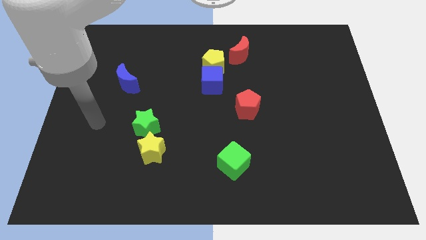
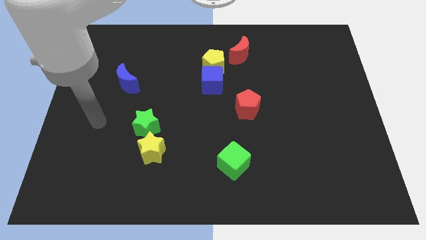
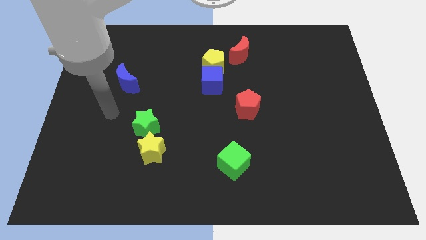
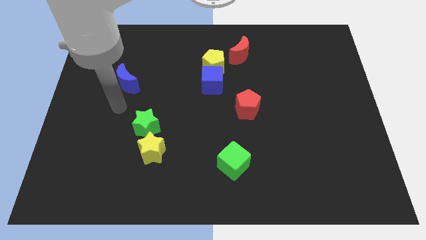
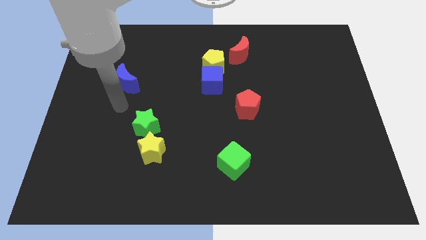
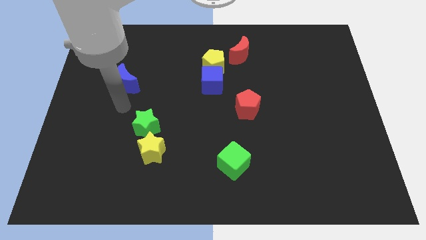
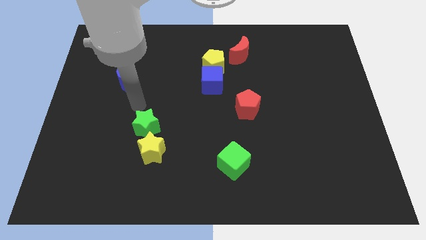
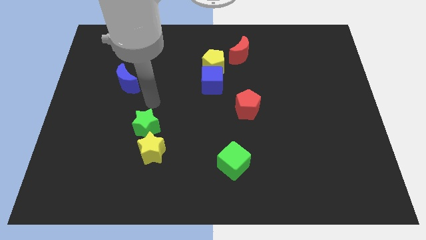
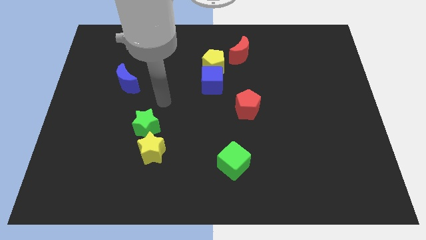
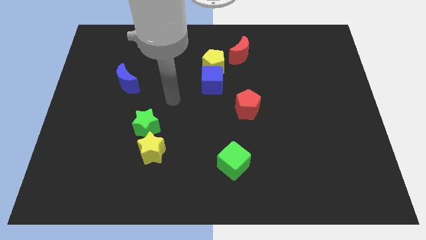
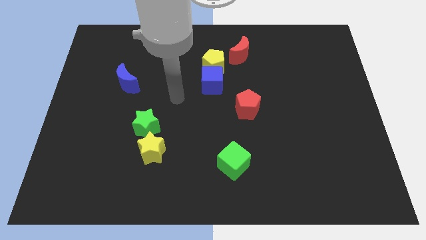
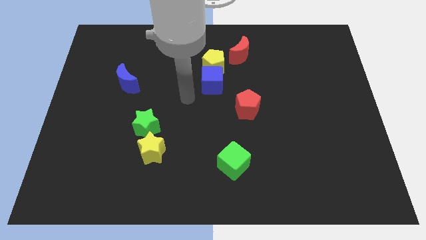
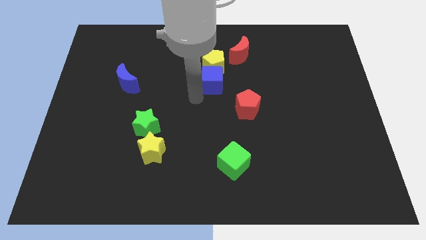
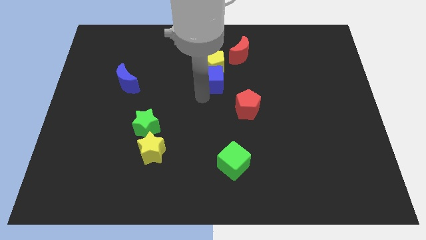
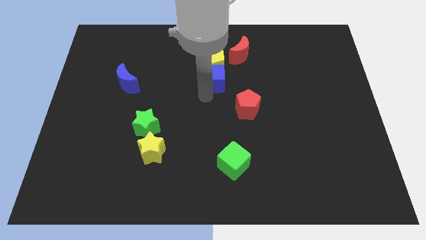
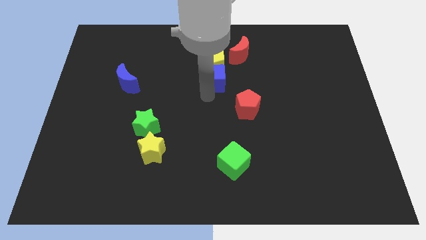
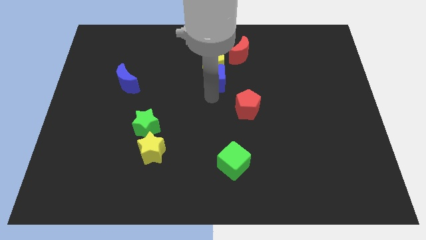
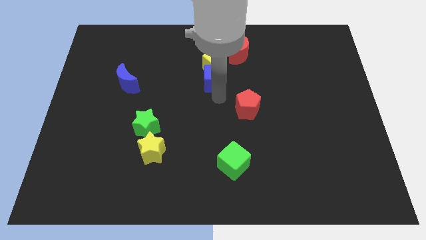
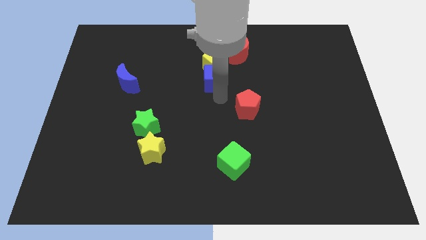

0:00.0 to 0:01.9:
slightly touch the blue cube

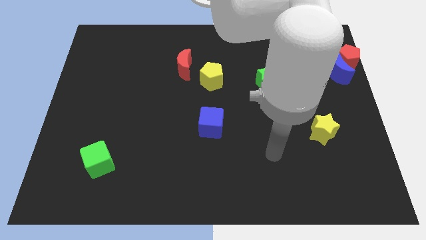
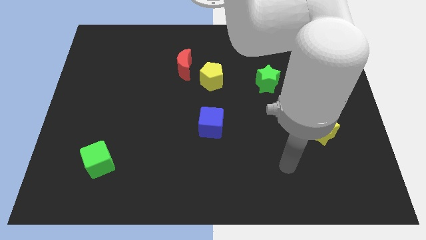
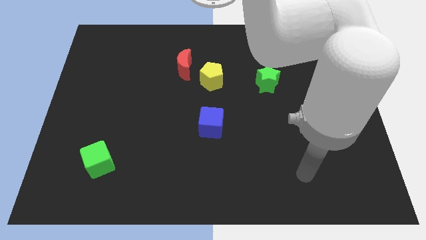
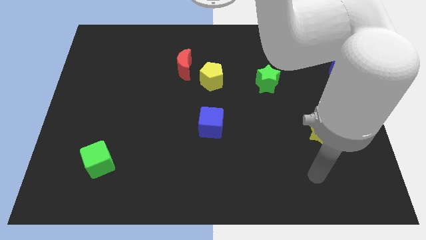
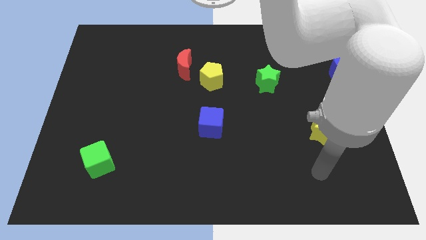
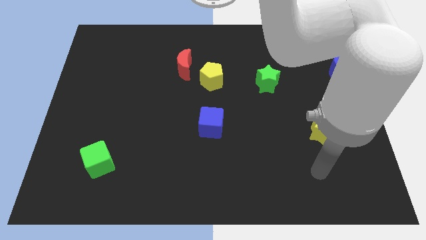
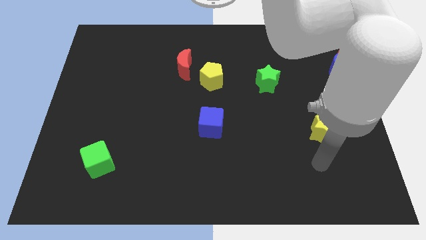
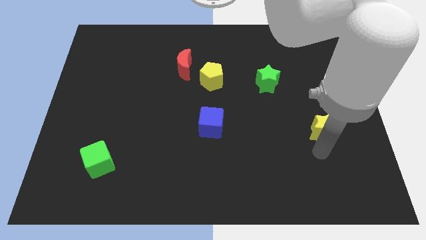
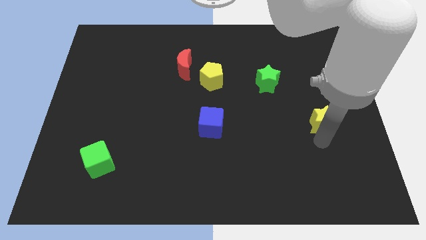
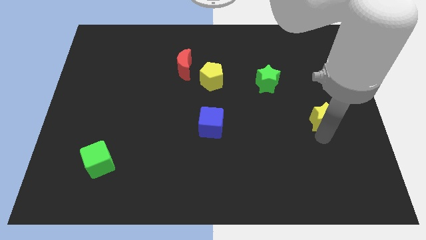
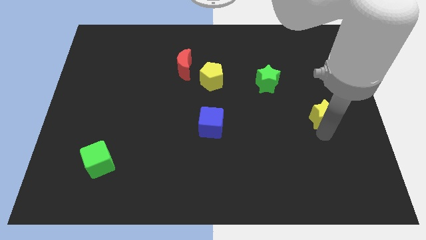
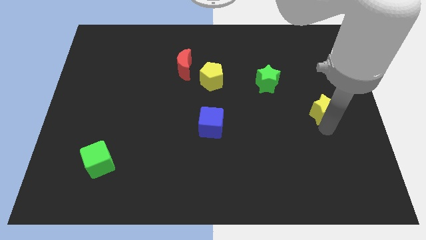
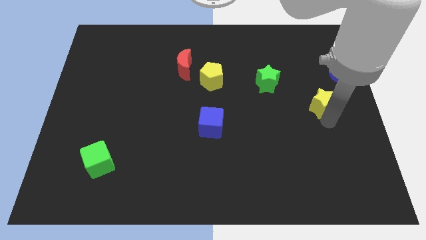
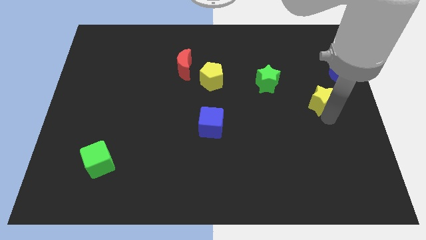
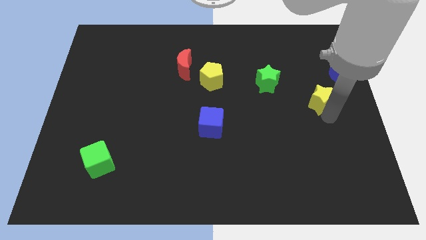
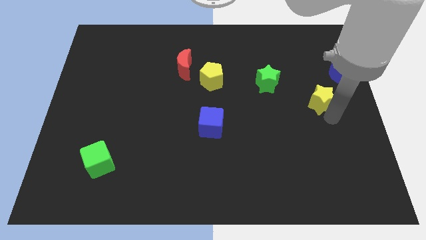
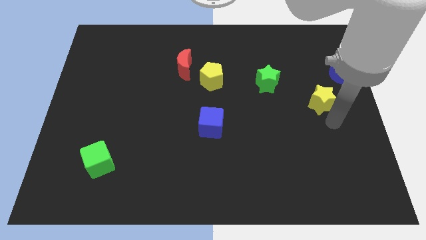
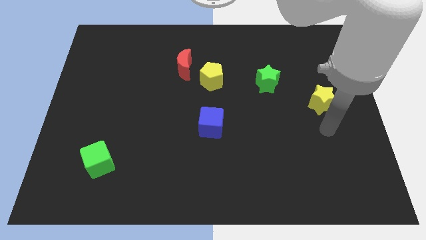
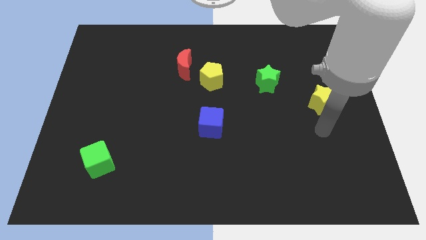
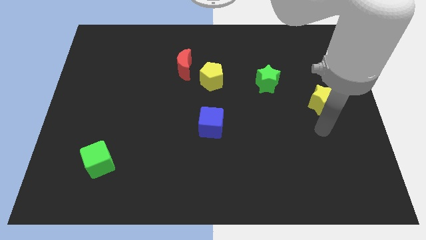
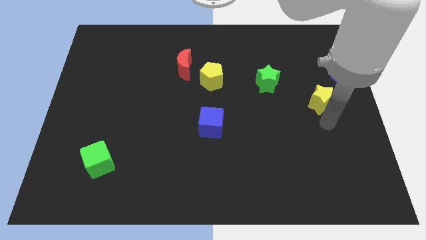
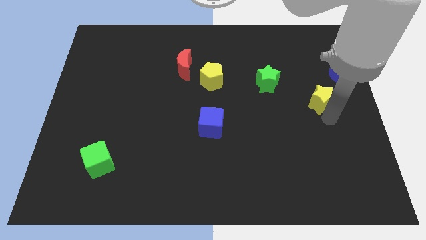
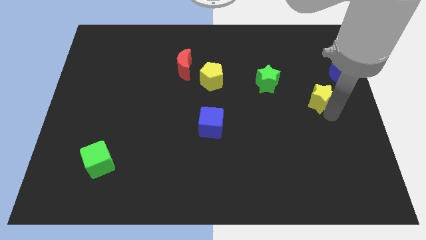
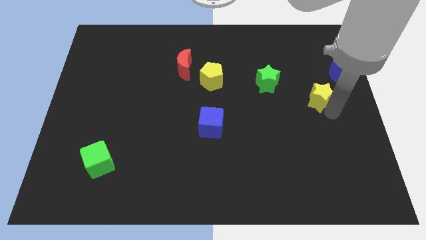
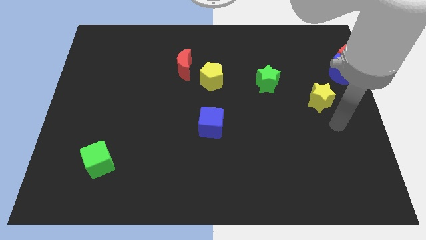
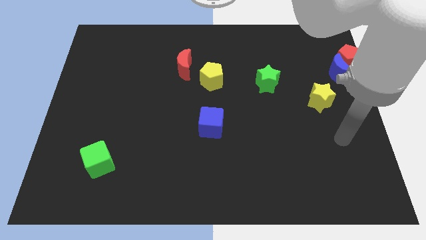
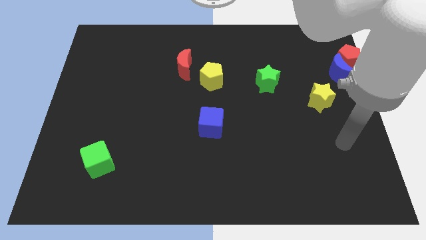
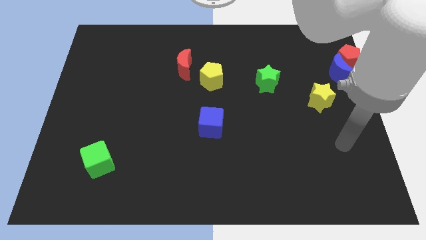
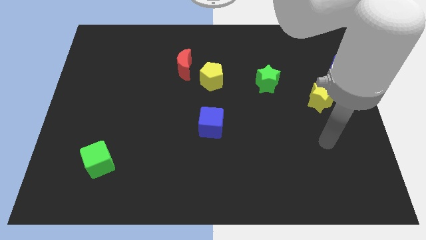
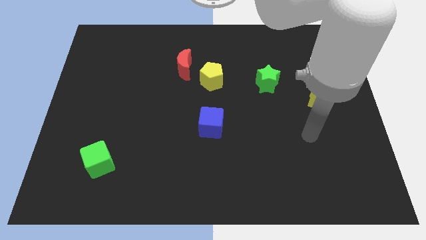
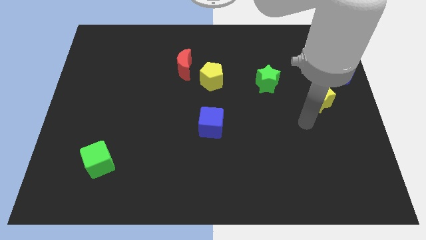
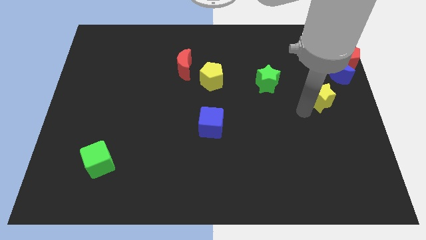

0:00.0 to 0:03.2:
place the yellow star diagonally to the green star

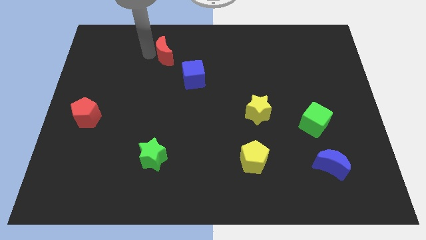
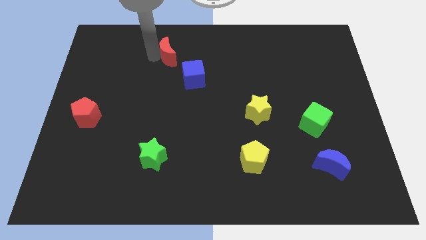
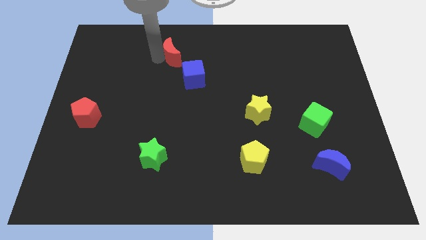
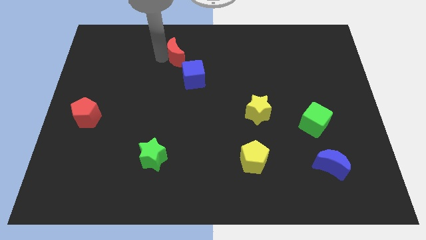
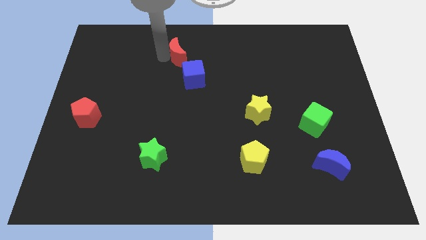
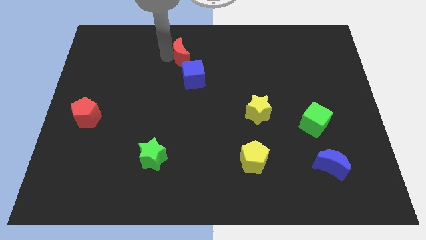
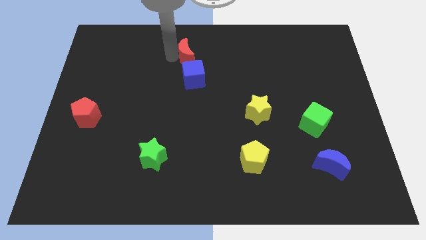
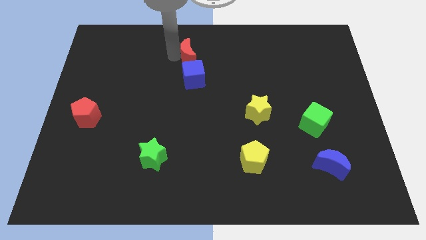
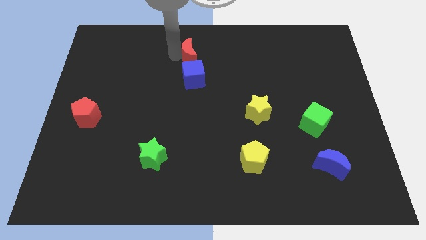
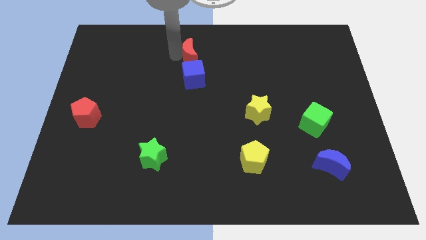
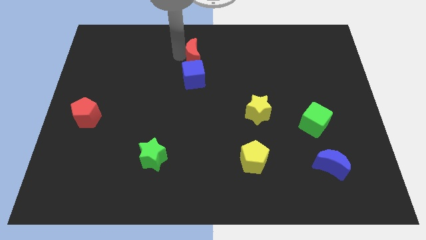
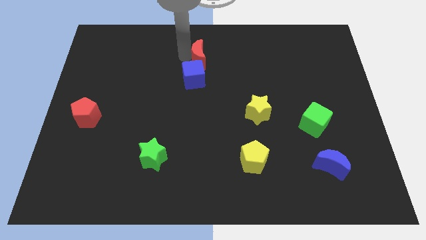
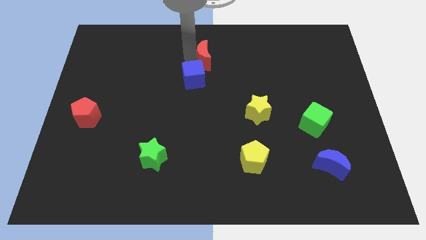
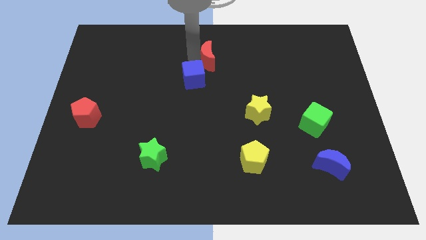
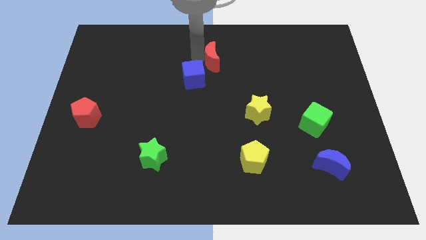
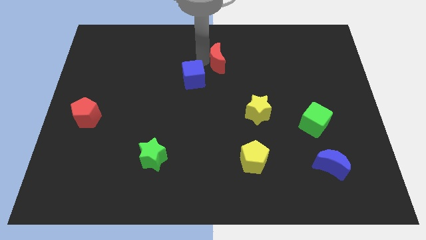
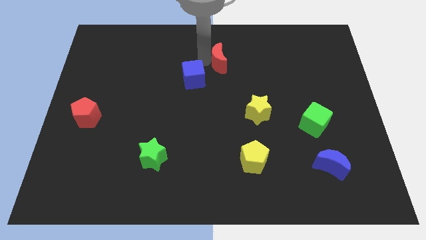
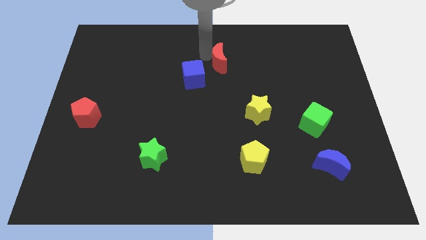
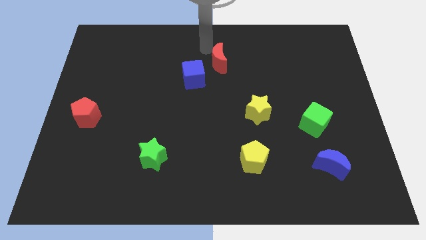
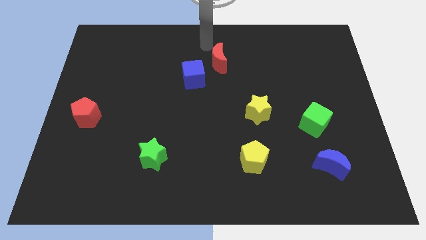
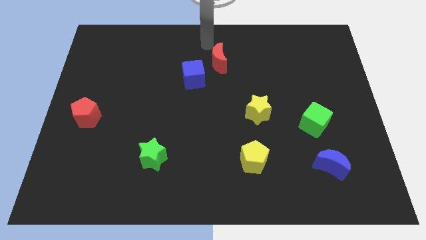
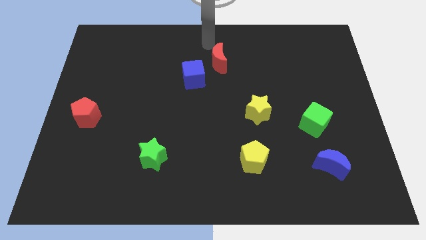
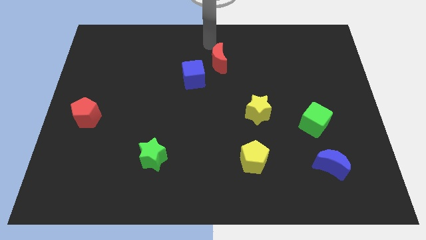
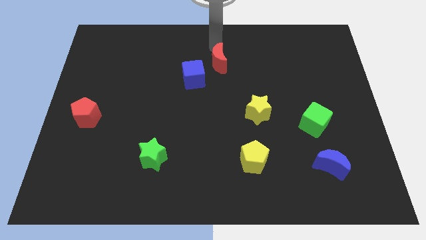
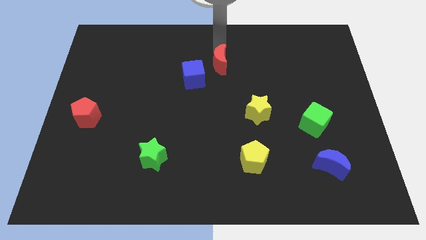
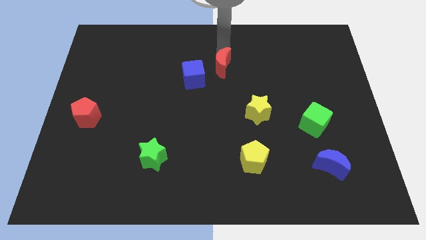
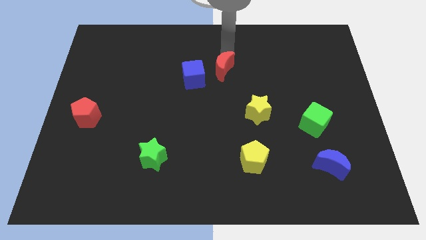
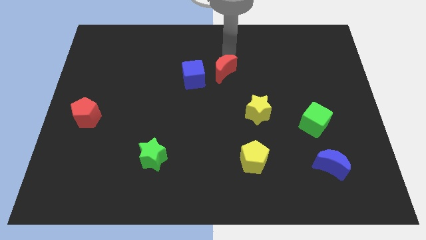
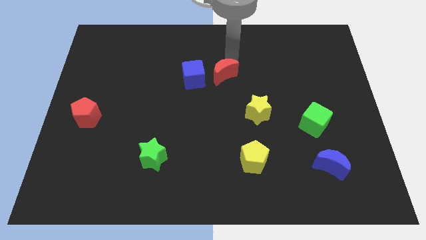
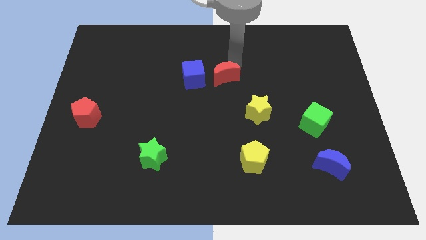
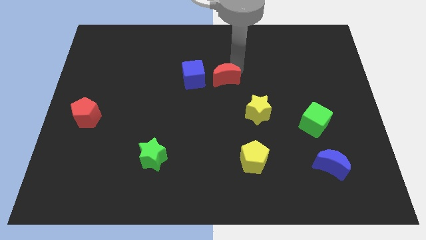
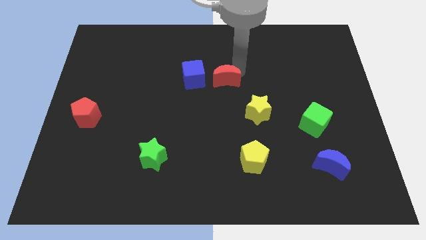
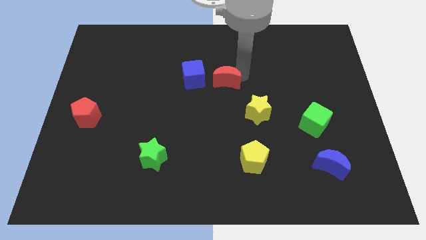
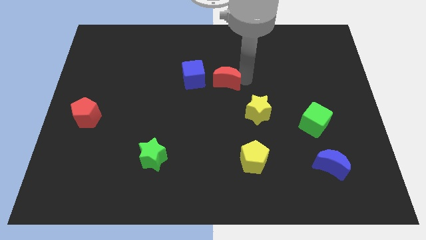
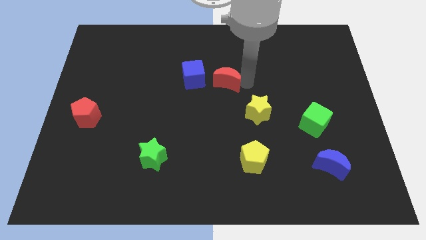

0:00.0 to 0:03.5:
move the red moon right to the blue cube

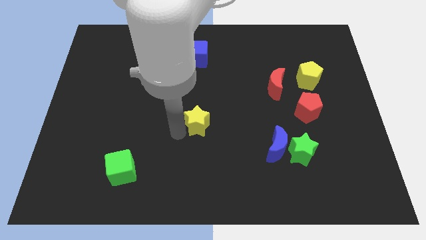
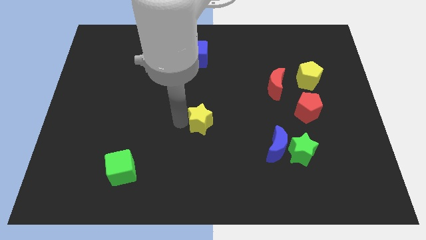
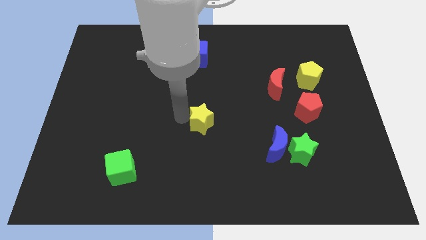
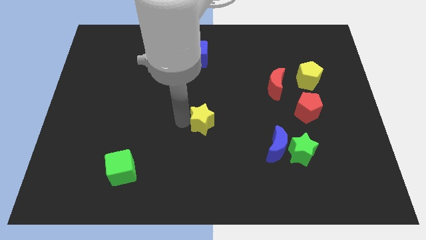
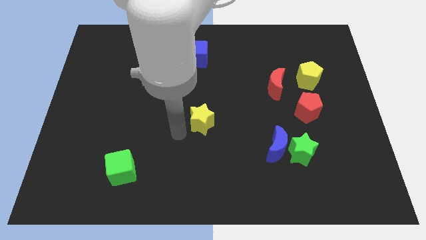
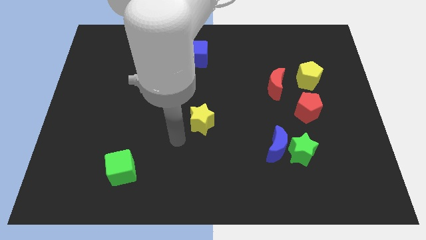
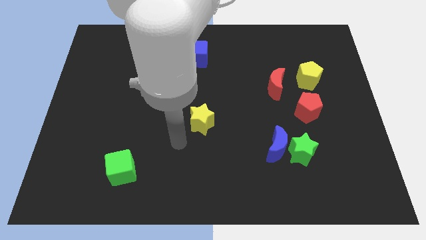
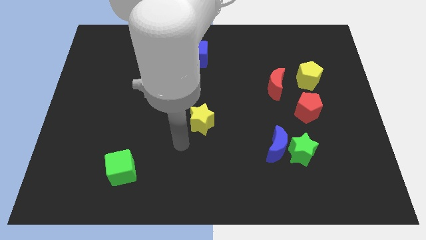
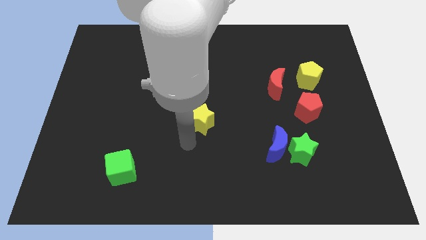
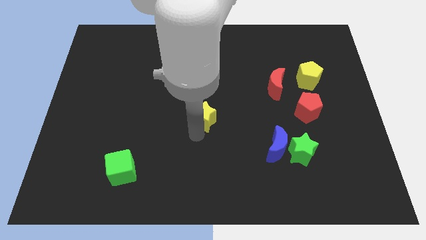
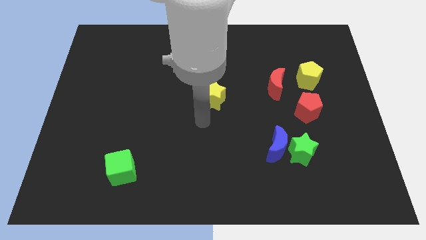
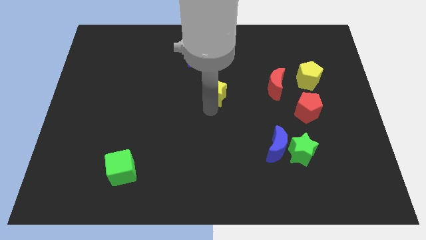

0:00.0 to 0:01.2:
move the yellow star to the center of the board
